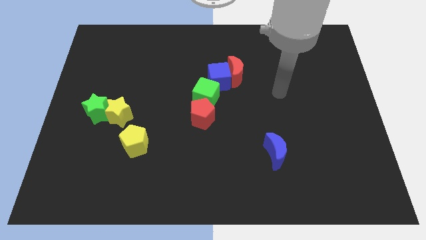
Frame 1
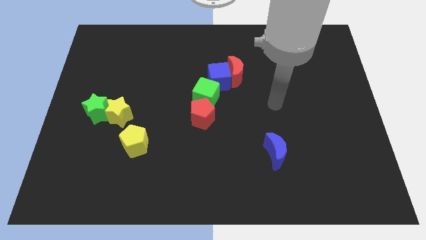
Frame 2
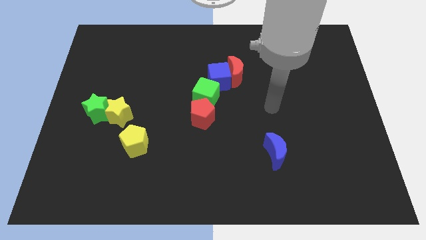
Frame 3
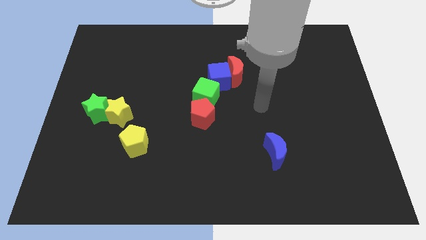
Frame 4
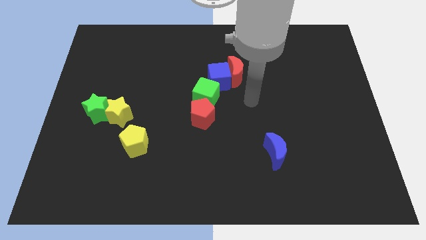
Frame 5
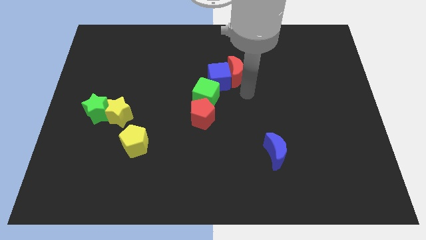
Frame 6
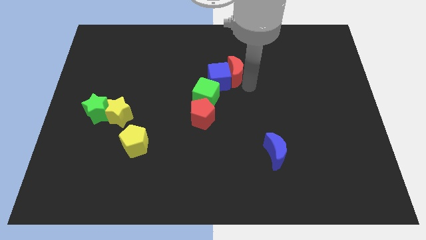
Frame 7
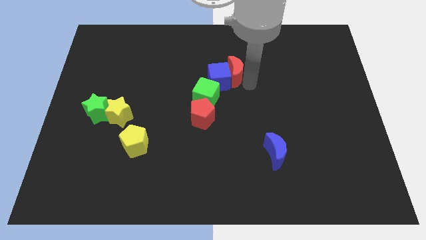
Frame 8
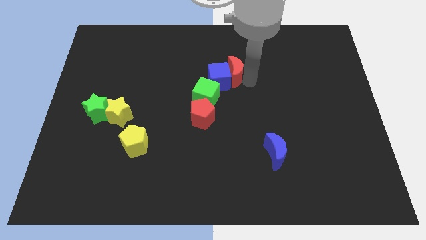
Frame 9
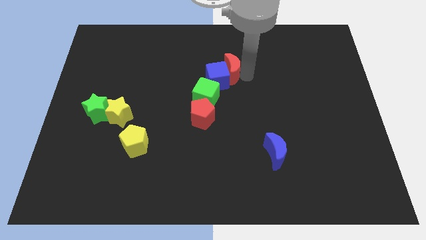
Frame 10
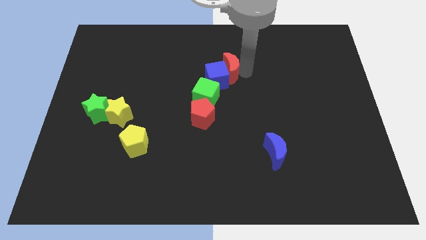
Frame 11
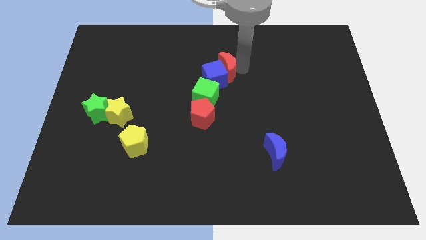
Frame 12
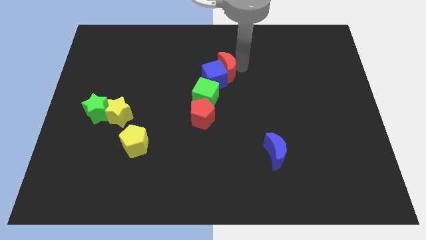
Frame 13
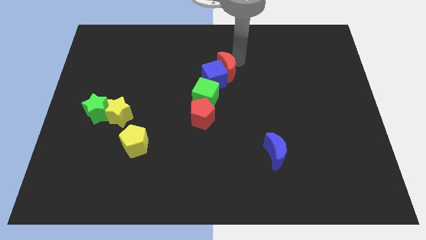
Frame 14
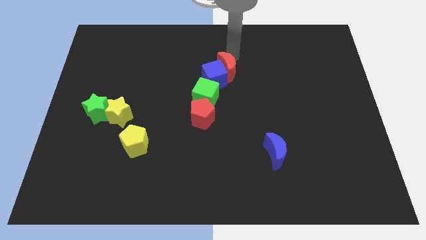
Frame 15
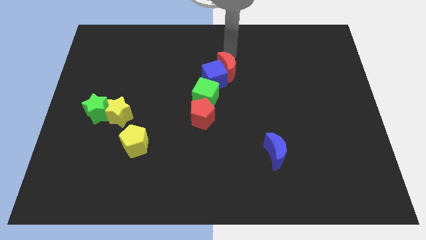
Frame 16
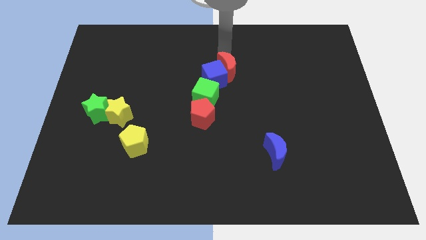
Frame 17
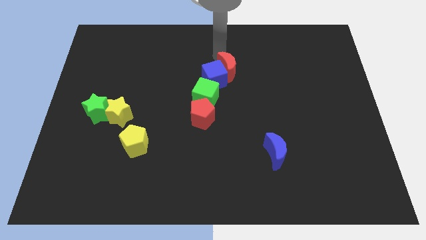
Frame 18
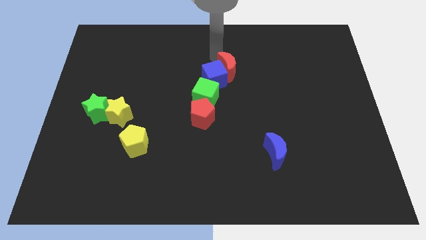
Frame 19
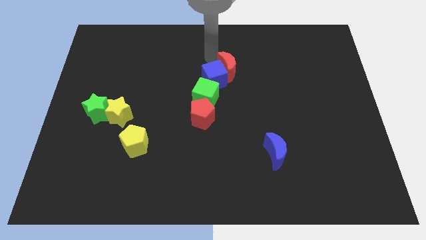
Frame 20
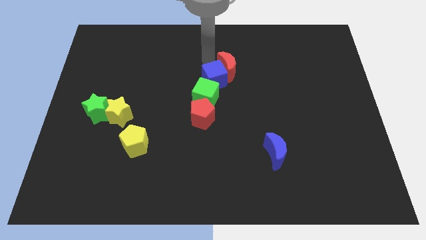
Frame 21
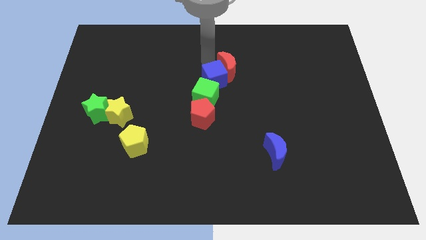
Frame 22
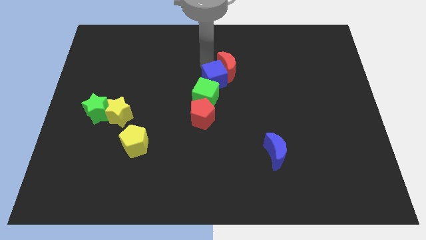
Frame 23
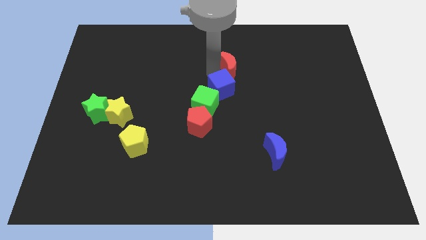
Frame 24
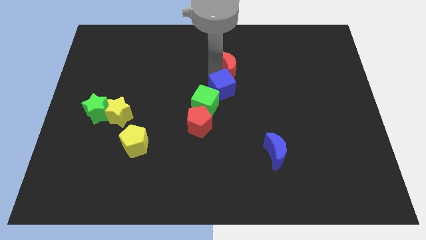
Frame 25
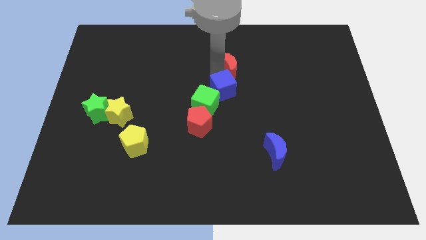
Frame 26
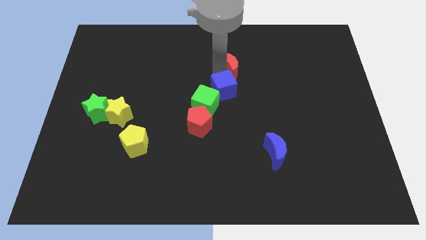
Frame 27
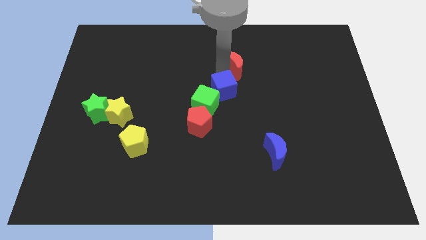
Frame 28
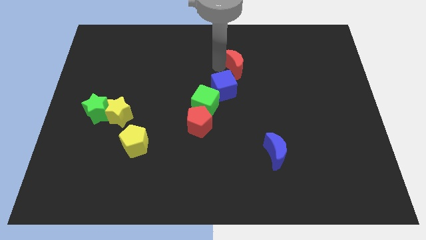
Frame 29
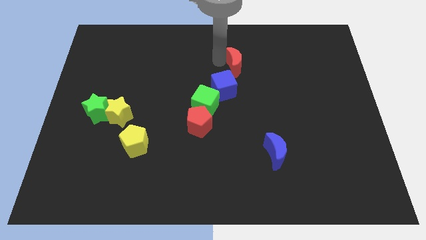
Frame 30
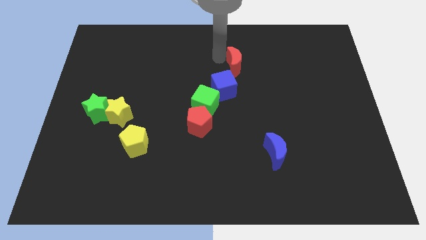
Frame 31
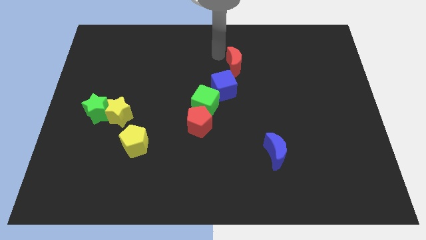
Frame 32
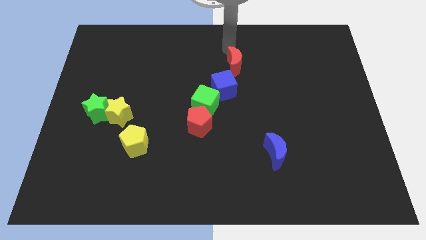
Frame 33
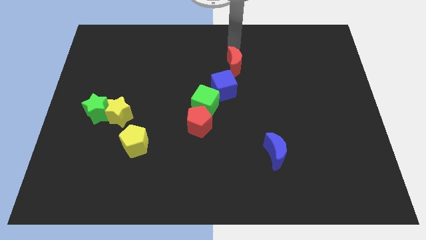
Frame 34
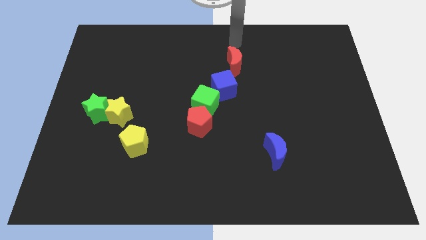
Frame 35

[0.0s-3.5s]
move the blue cube to the bottom side of the red moon

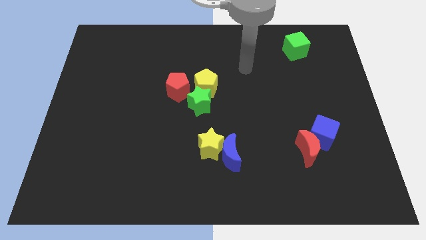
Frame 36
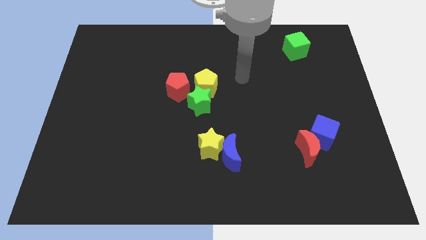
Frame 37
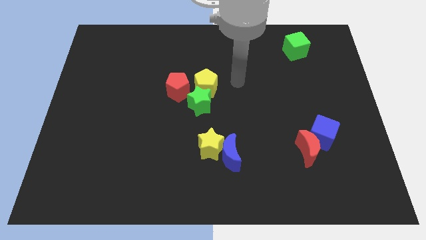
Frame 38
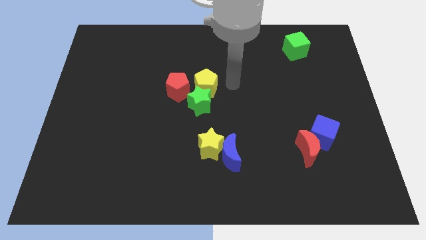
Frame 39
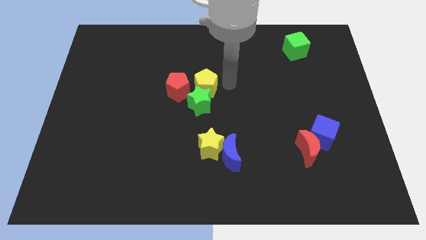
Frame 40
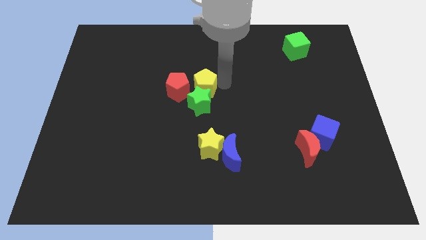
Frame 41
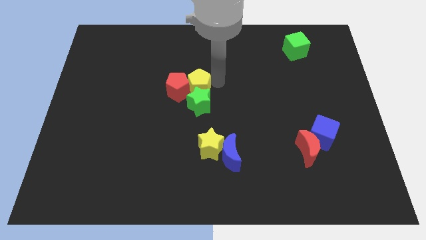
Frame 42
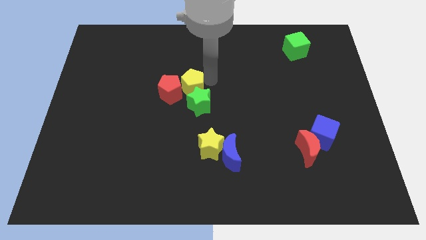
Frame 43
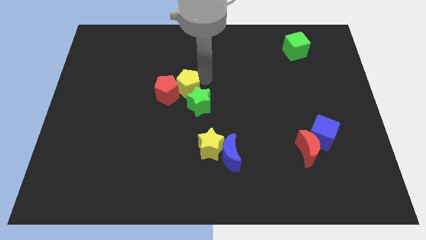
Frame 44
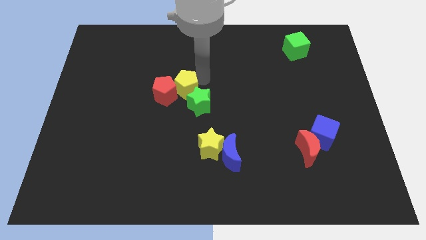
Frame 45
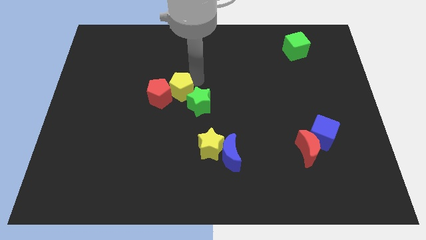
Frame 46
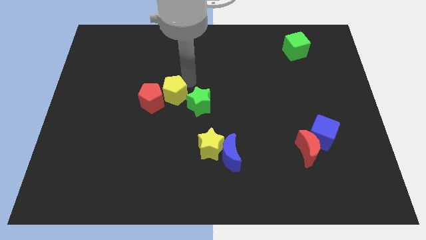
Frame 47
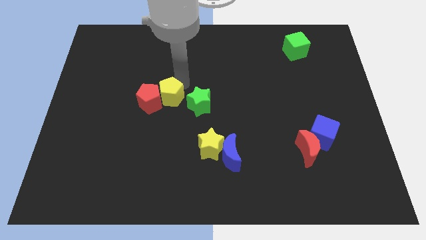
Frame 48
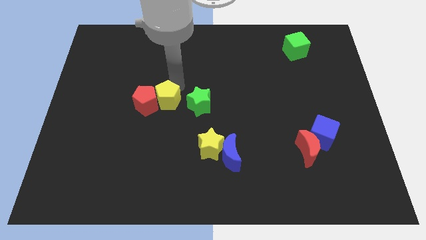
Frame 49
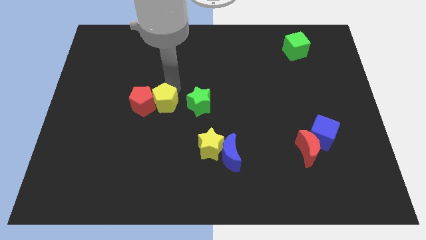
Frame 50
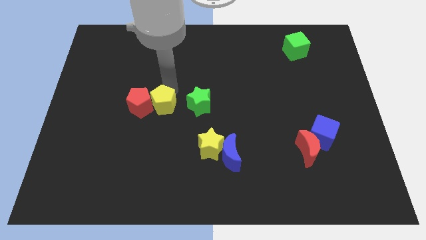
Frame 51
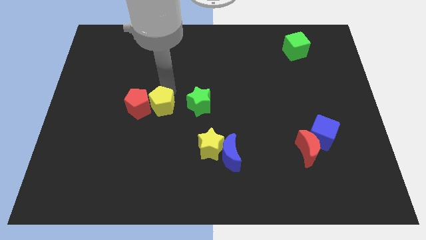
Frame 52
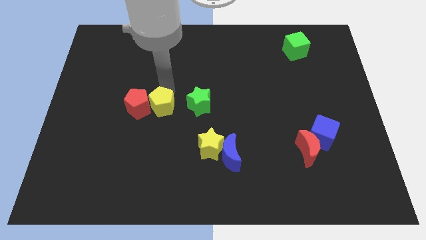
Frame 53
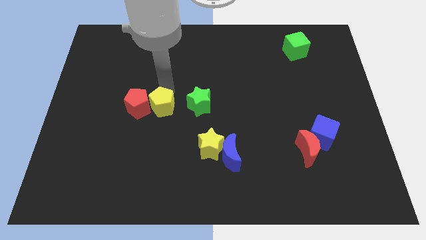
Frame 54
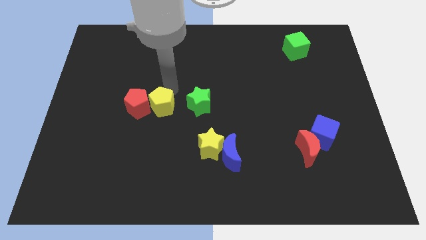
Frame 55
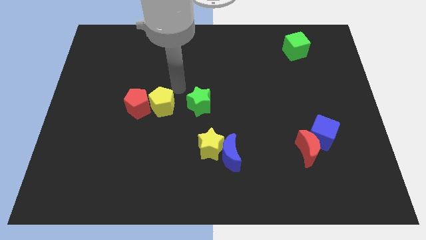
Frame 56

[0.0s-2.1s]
place the yellow pentagon in between red pentagon and green star

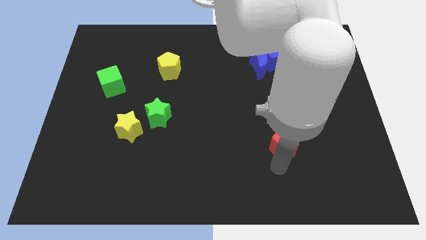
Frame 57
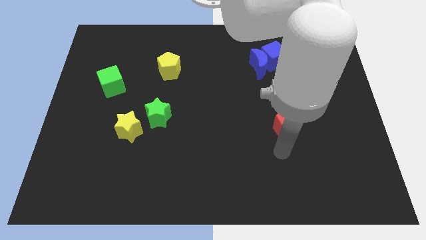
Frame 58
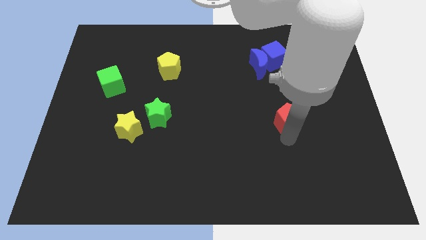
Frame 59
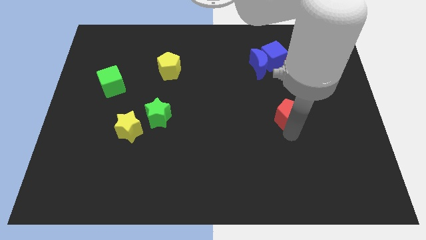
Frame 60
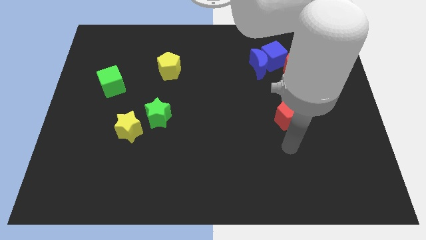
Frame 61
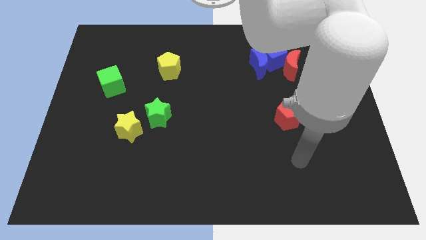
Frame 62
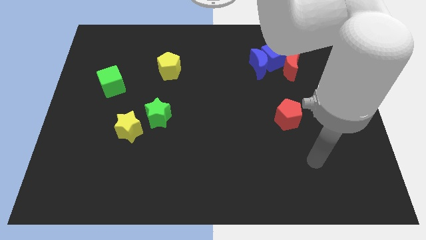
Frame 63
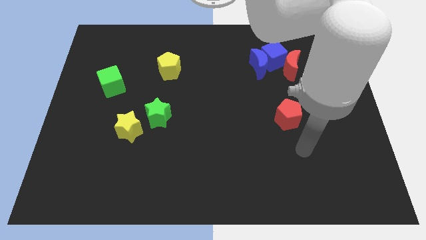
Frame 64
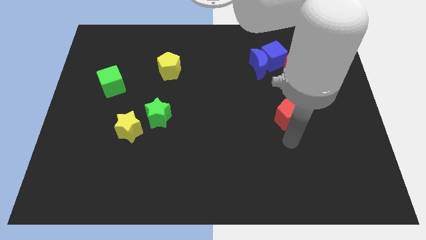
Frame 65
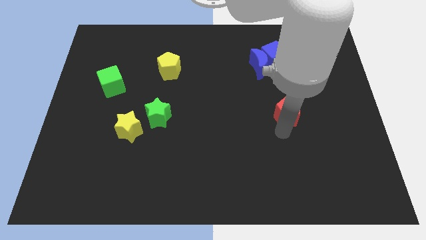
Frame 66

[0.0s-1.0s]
move red pentagon slightly upwards

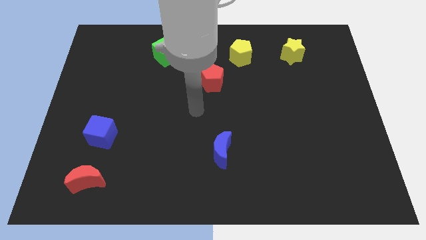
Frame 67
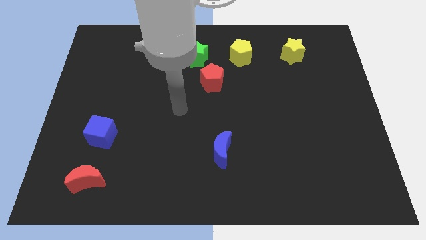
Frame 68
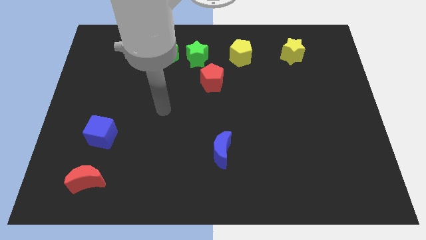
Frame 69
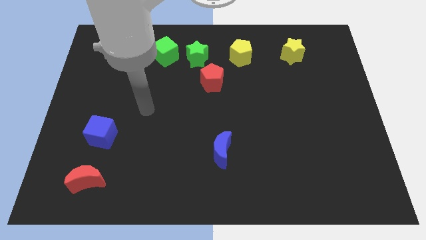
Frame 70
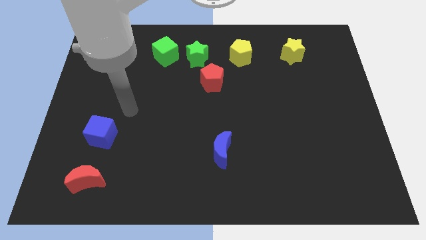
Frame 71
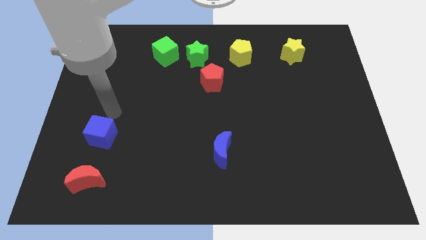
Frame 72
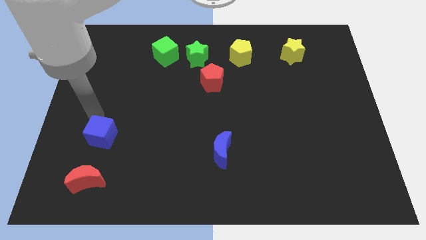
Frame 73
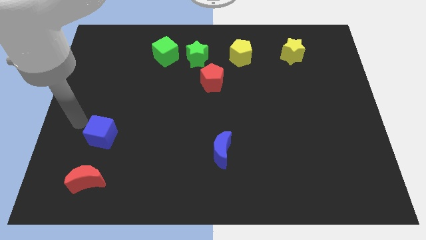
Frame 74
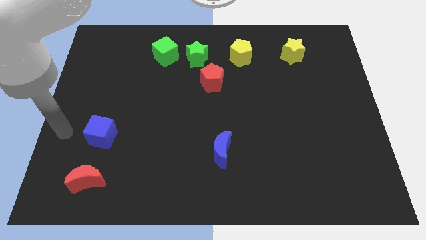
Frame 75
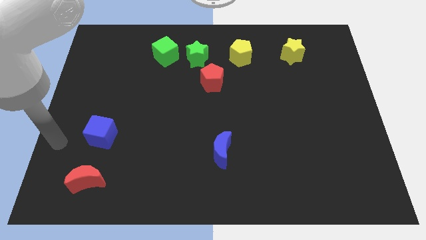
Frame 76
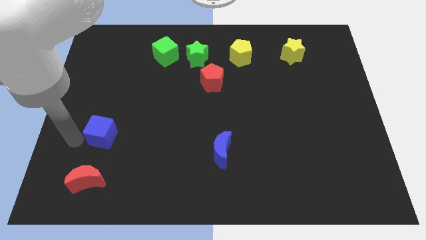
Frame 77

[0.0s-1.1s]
move the arm towards the left of blue cube

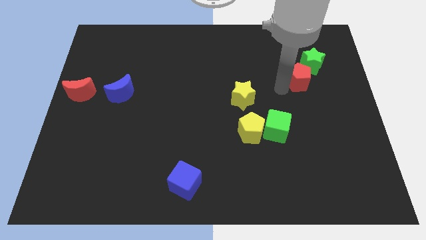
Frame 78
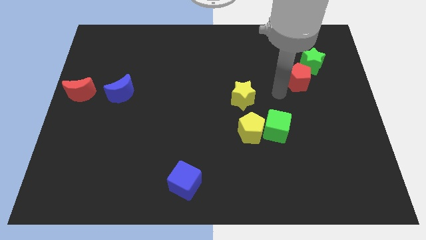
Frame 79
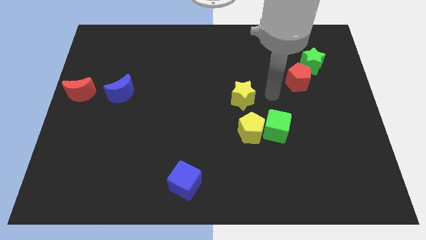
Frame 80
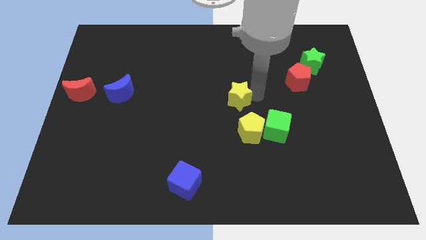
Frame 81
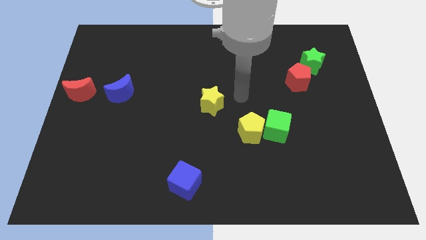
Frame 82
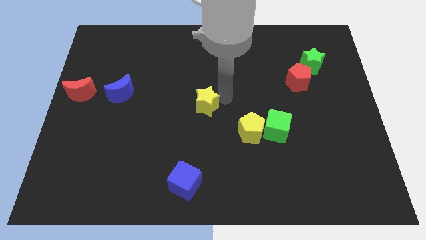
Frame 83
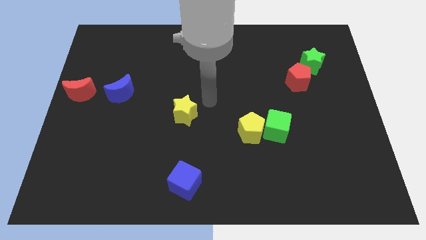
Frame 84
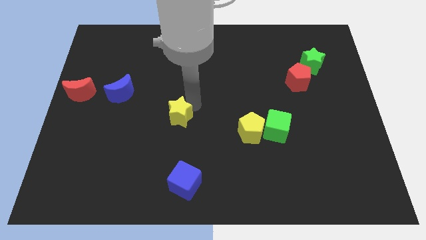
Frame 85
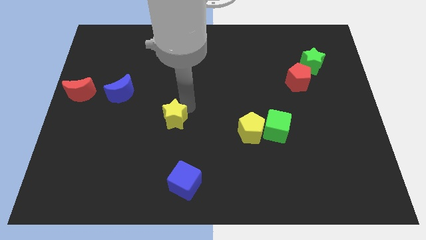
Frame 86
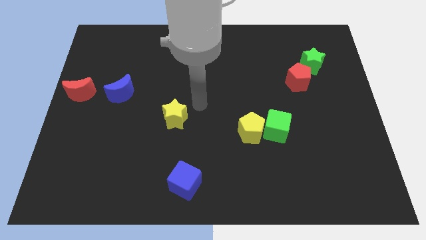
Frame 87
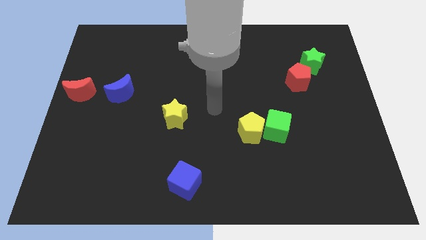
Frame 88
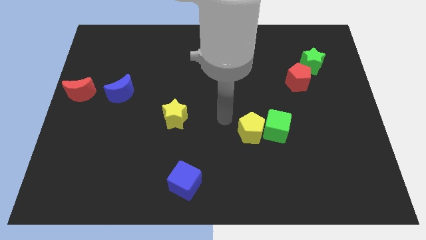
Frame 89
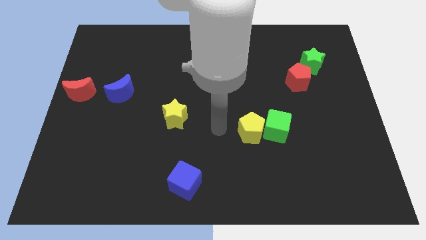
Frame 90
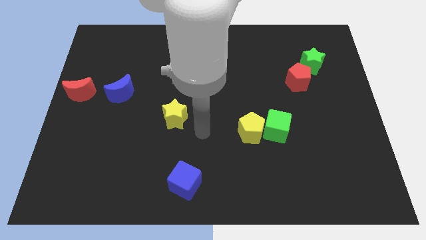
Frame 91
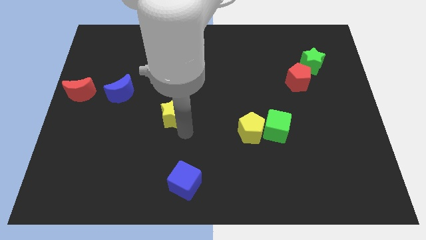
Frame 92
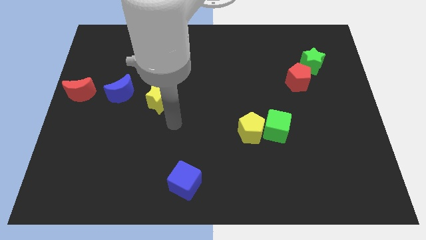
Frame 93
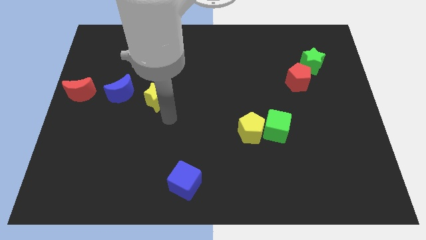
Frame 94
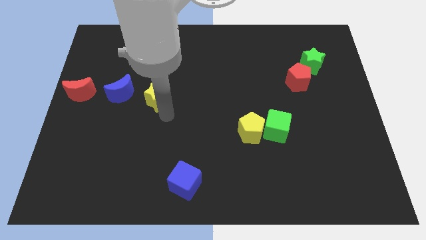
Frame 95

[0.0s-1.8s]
move the yellow star to the right of the blue crescent
